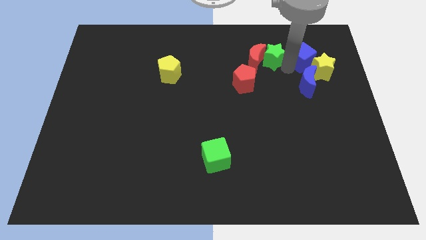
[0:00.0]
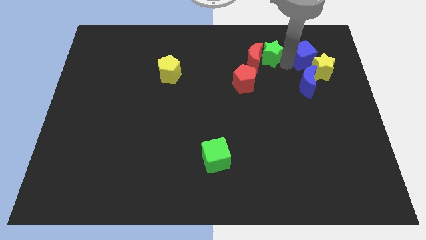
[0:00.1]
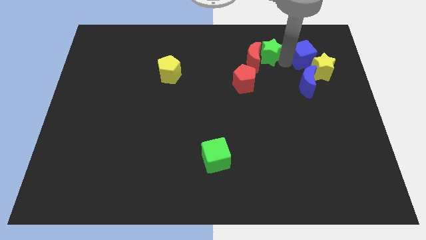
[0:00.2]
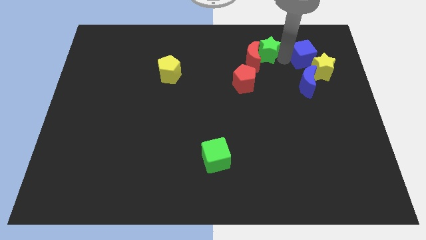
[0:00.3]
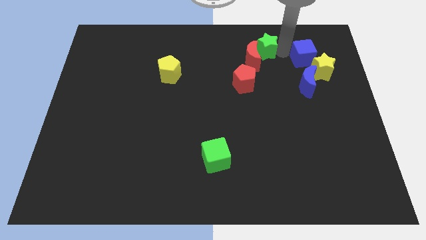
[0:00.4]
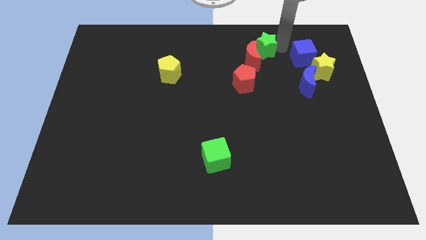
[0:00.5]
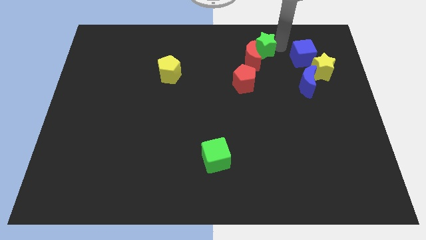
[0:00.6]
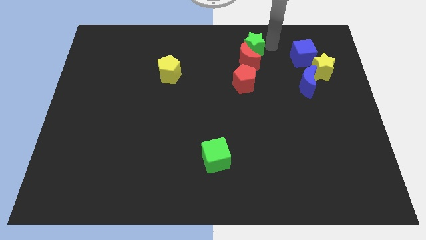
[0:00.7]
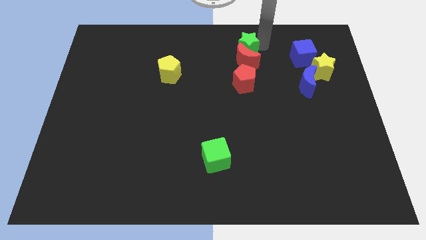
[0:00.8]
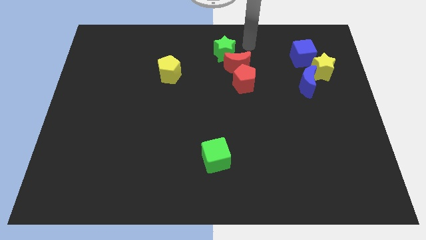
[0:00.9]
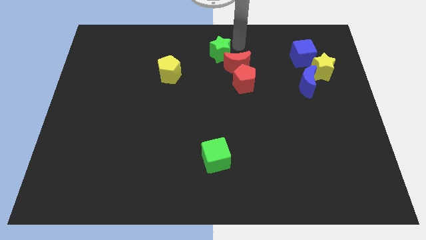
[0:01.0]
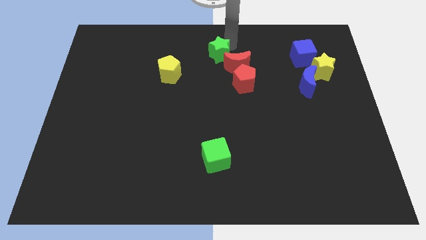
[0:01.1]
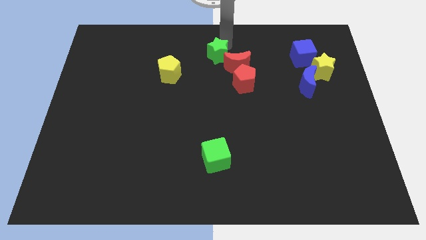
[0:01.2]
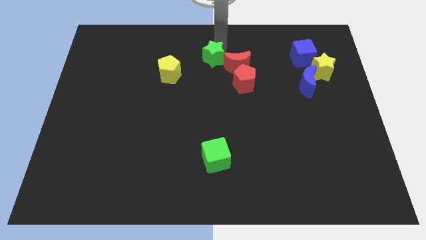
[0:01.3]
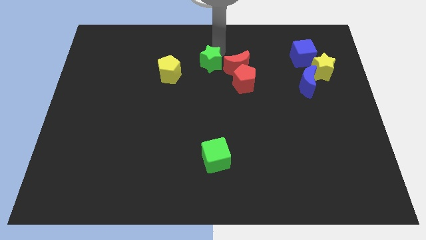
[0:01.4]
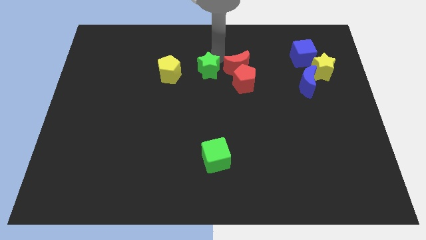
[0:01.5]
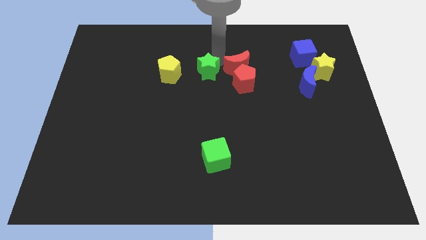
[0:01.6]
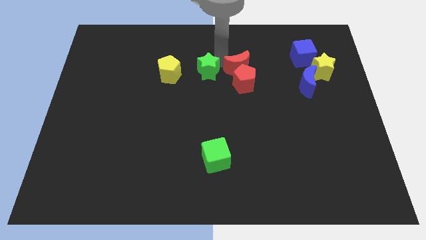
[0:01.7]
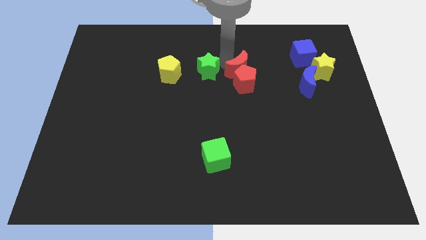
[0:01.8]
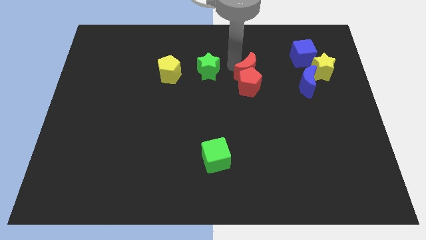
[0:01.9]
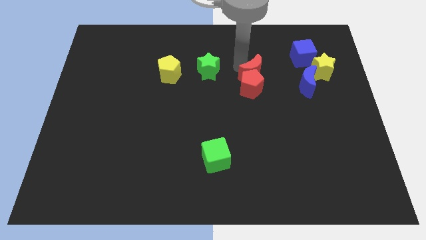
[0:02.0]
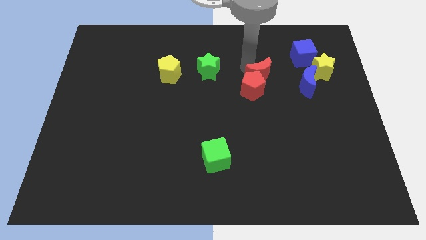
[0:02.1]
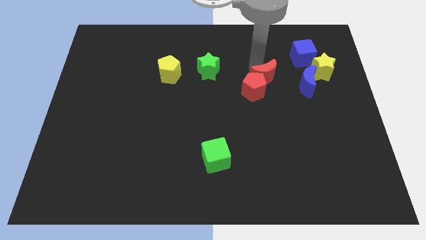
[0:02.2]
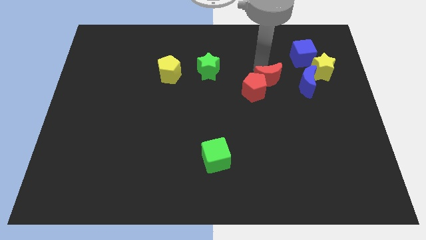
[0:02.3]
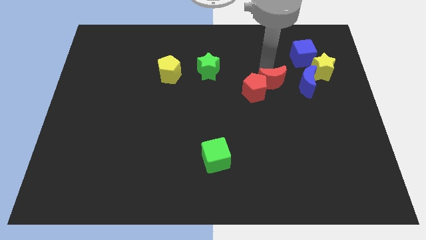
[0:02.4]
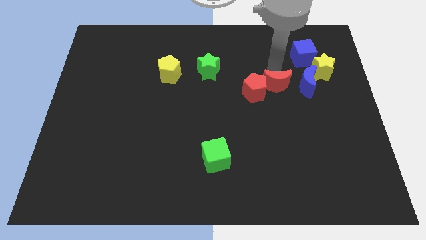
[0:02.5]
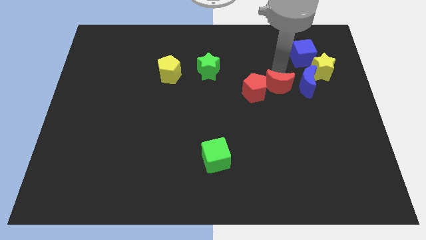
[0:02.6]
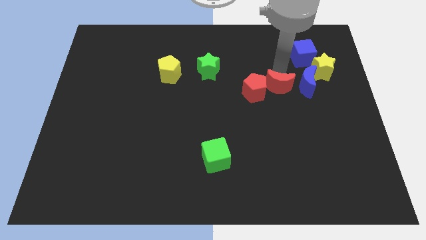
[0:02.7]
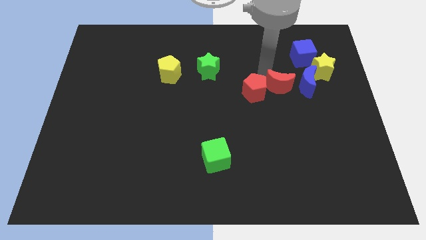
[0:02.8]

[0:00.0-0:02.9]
place red crescent beside blue crescent

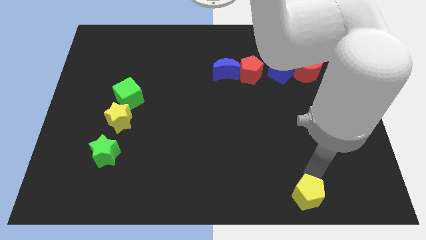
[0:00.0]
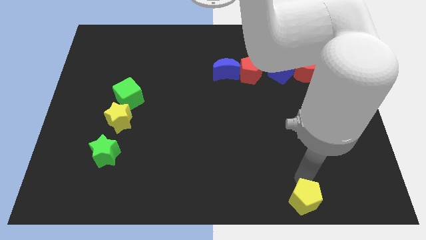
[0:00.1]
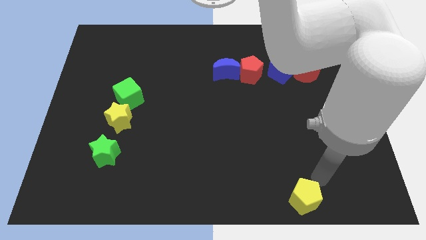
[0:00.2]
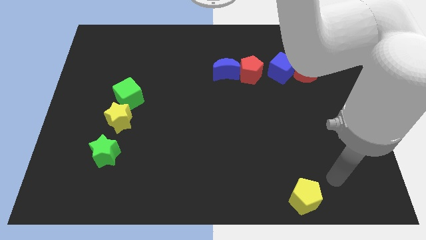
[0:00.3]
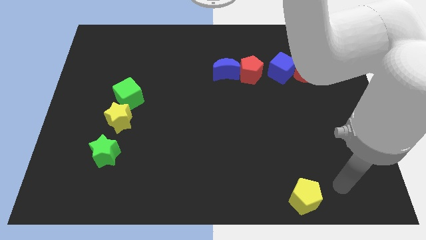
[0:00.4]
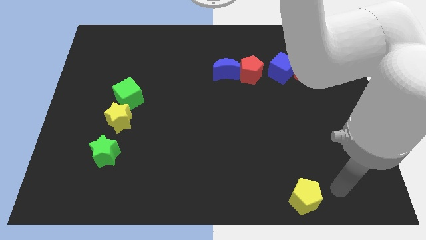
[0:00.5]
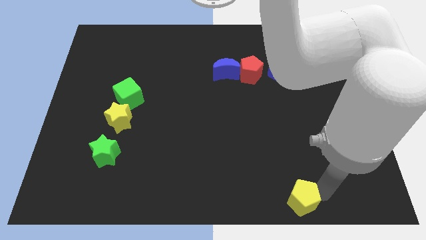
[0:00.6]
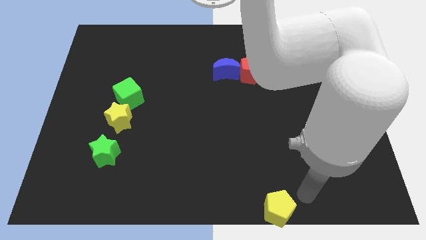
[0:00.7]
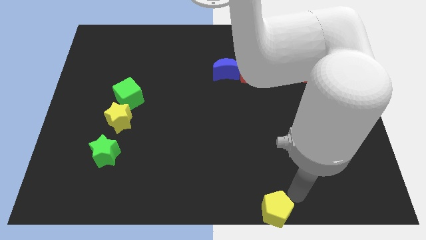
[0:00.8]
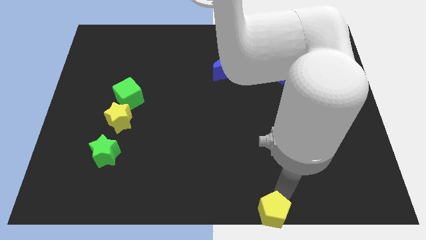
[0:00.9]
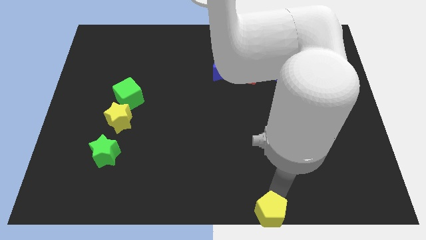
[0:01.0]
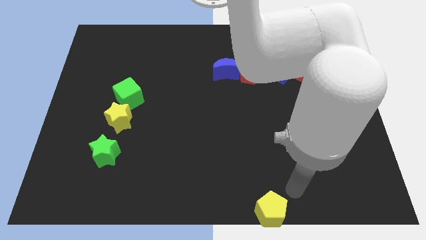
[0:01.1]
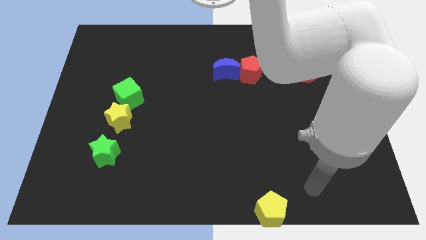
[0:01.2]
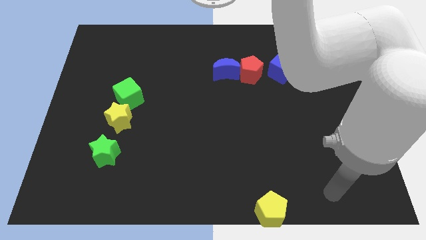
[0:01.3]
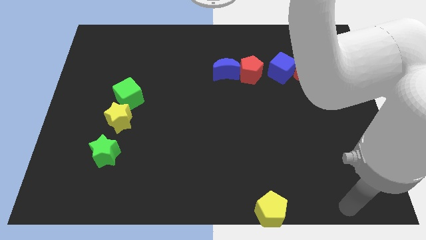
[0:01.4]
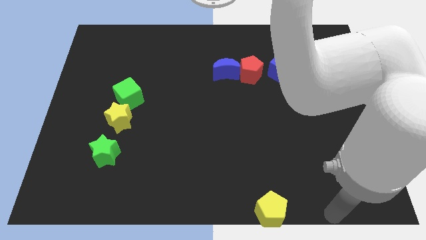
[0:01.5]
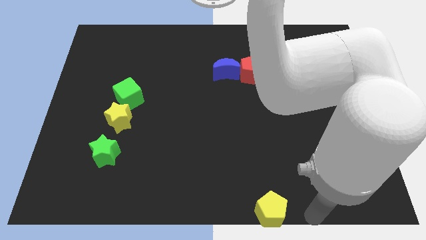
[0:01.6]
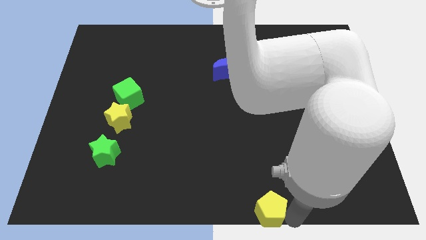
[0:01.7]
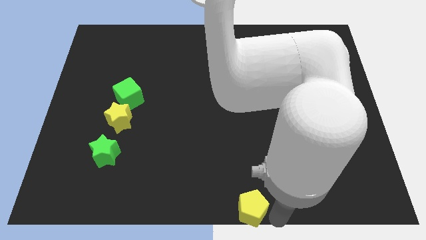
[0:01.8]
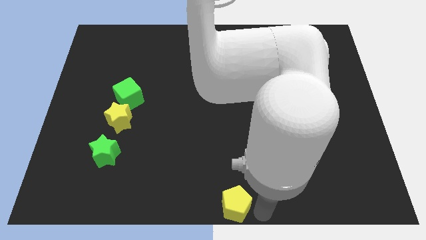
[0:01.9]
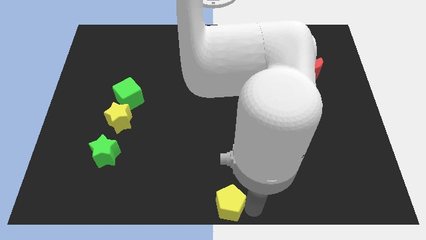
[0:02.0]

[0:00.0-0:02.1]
move the yellow pentagon to the center bottom of the board

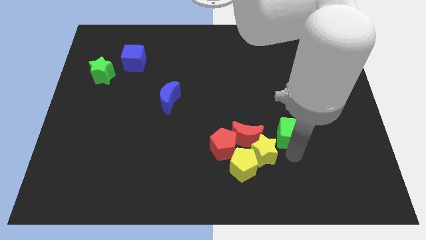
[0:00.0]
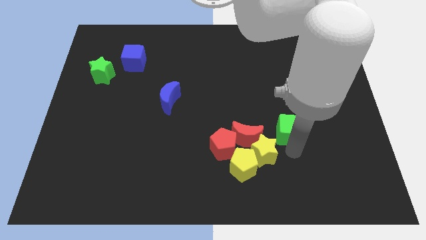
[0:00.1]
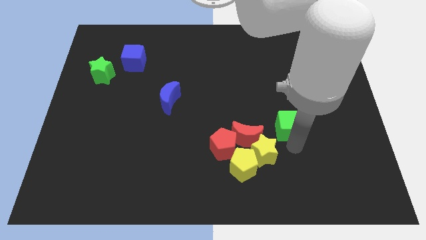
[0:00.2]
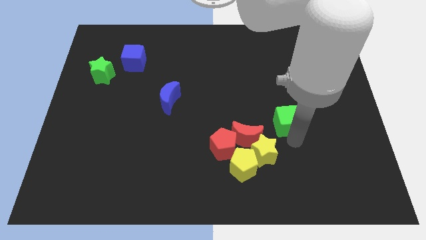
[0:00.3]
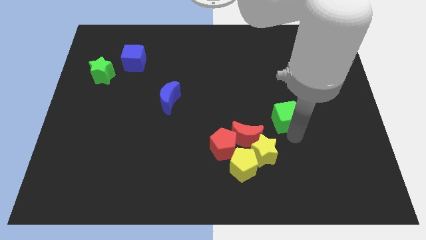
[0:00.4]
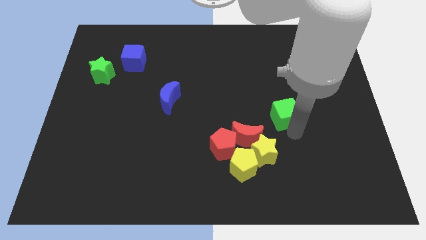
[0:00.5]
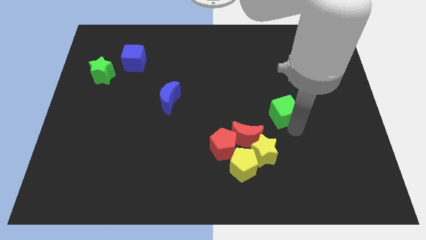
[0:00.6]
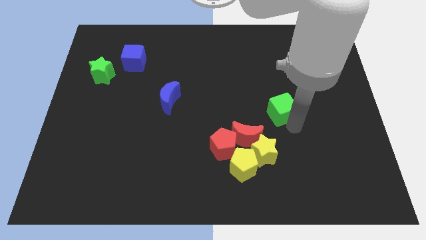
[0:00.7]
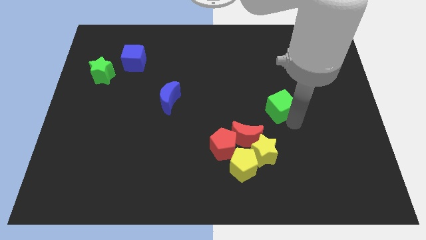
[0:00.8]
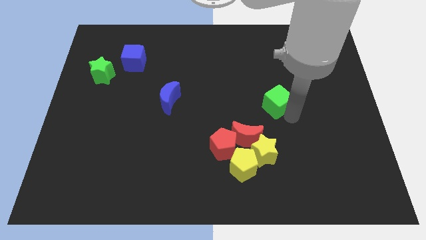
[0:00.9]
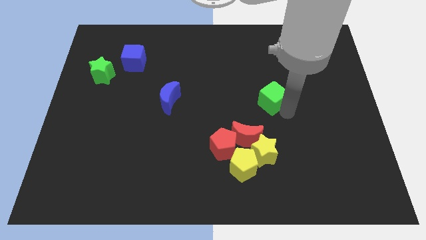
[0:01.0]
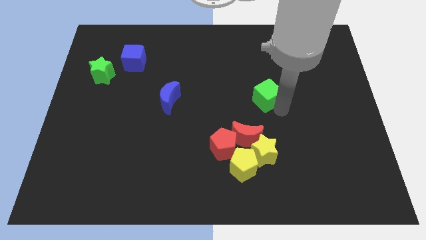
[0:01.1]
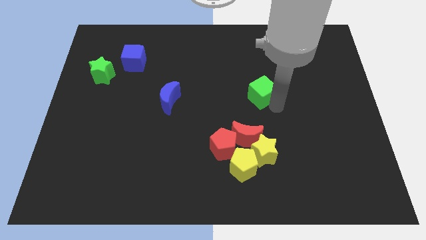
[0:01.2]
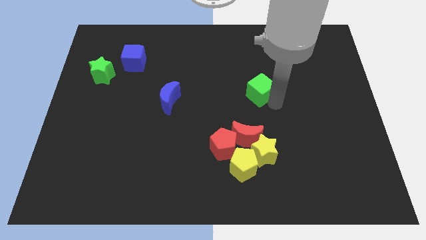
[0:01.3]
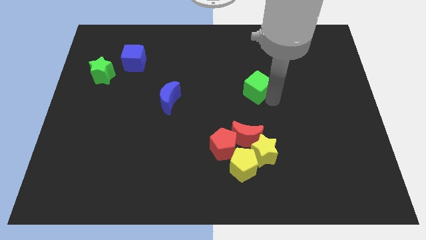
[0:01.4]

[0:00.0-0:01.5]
push the green cube slightly to the top of the board

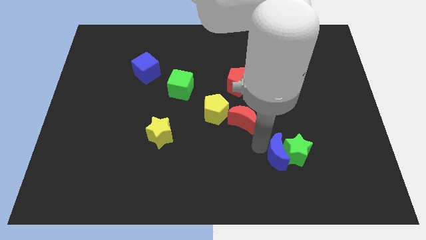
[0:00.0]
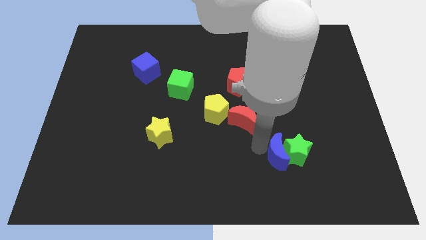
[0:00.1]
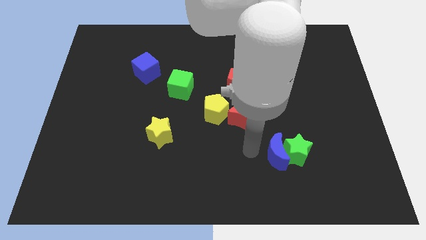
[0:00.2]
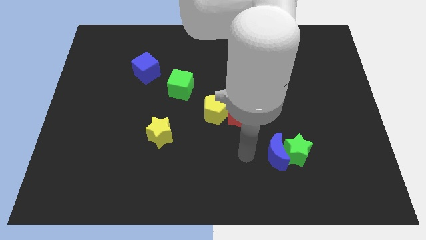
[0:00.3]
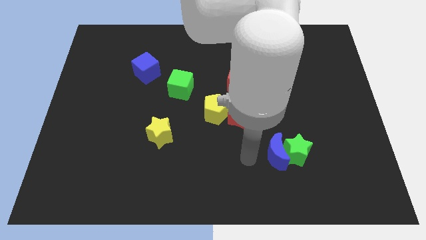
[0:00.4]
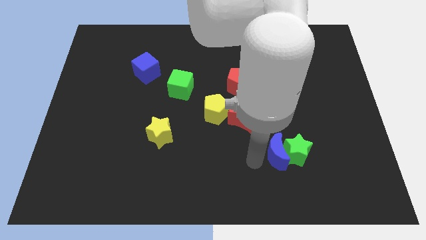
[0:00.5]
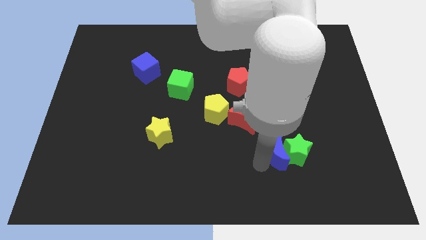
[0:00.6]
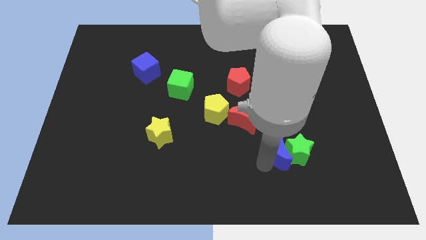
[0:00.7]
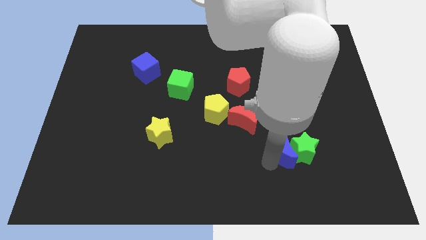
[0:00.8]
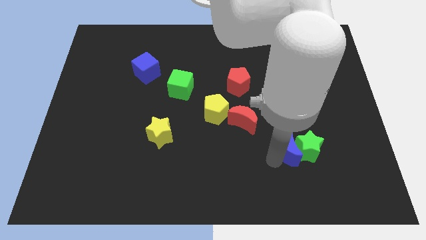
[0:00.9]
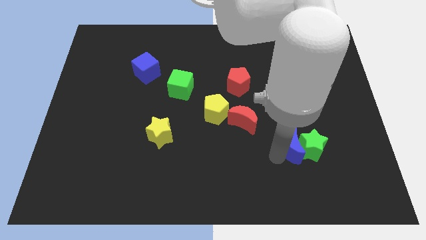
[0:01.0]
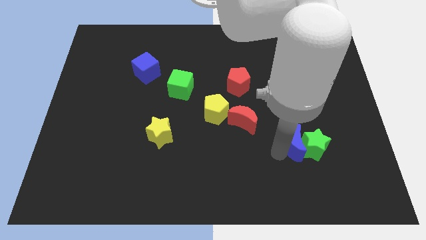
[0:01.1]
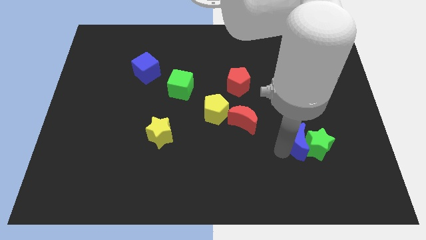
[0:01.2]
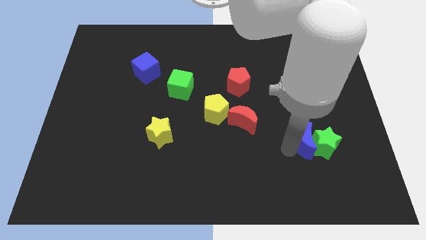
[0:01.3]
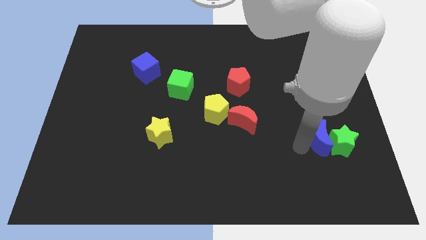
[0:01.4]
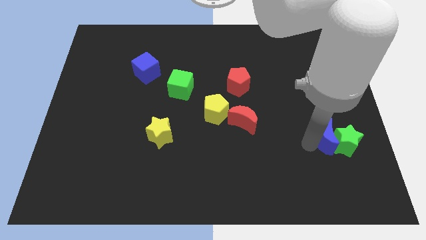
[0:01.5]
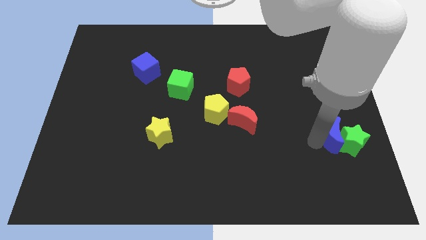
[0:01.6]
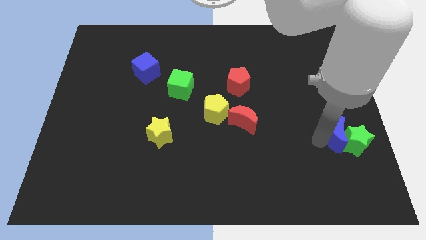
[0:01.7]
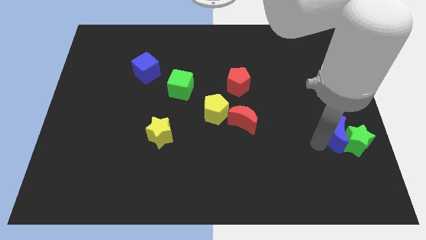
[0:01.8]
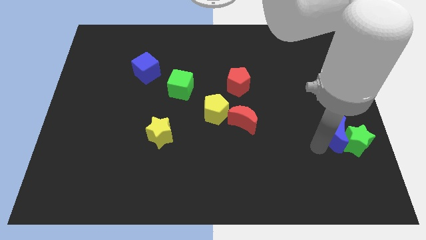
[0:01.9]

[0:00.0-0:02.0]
drag the blue moon along with the green star slightly to the right

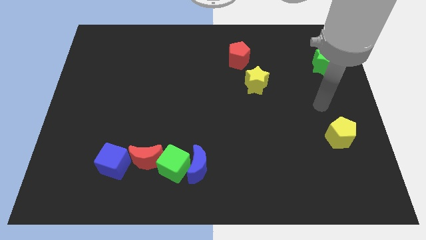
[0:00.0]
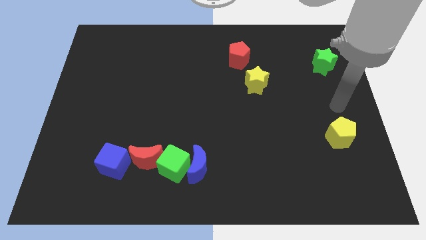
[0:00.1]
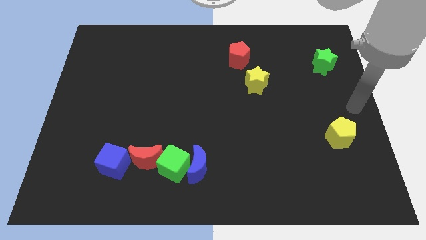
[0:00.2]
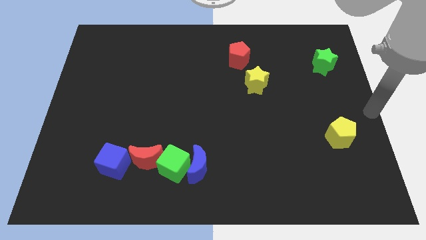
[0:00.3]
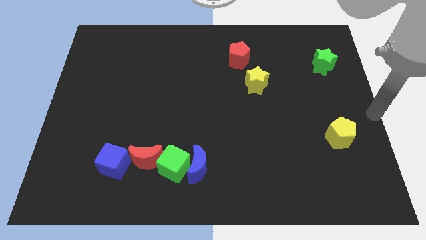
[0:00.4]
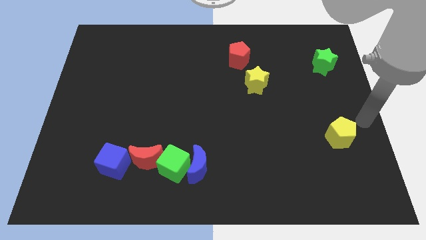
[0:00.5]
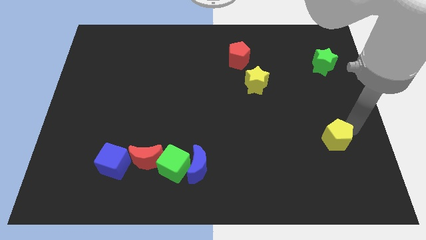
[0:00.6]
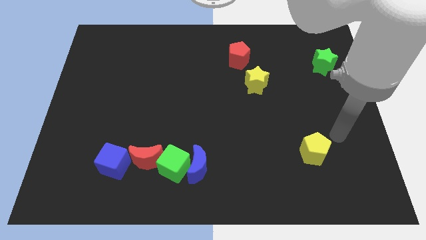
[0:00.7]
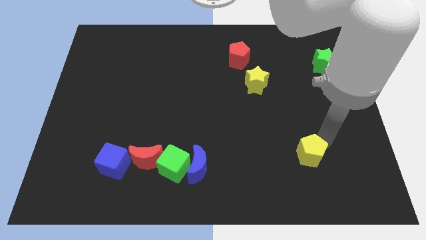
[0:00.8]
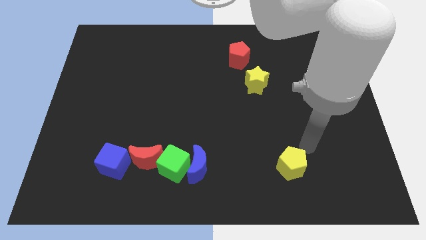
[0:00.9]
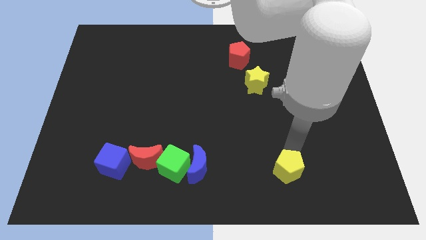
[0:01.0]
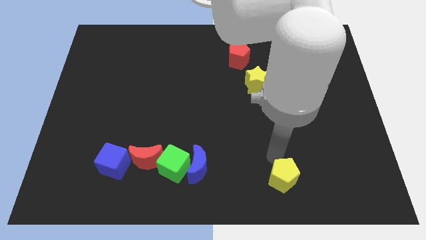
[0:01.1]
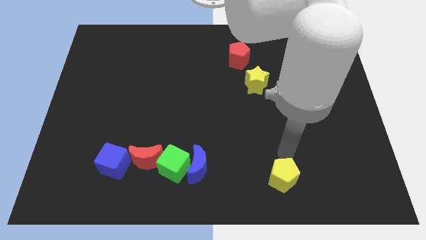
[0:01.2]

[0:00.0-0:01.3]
place the yellow pentagon diagonally to the yellow star
